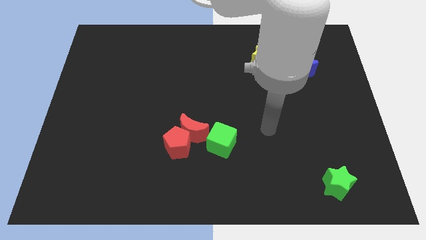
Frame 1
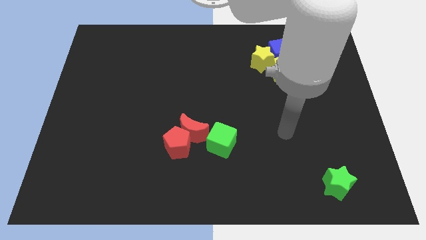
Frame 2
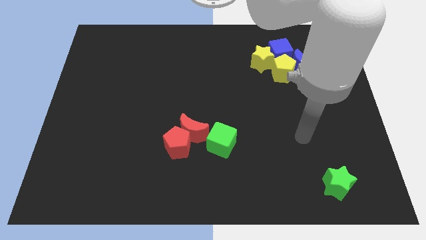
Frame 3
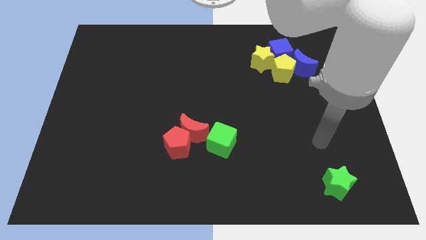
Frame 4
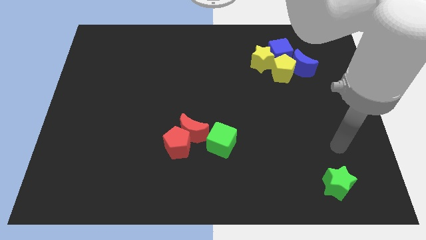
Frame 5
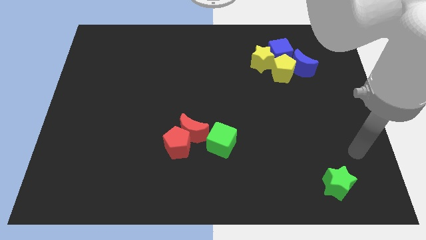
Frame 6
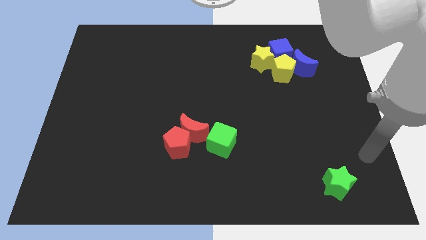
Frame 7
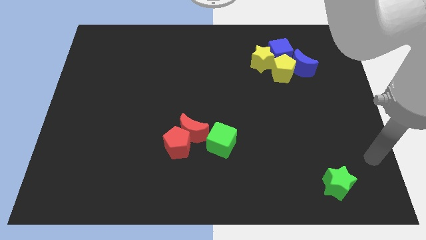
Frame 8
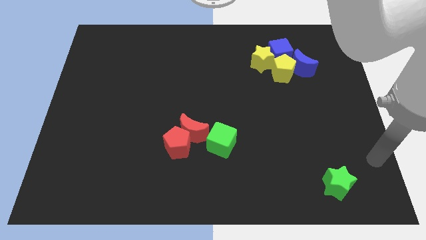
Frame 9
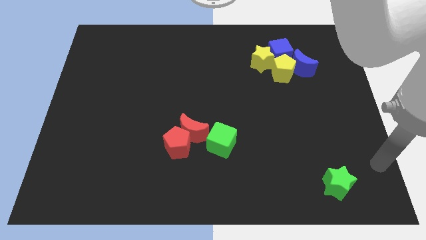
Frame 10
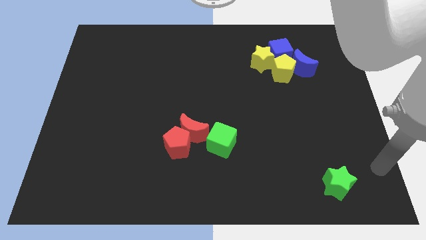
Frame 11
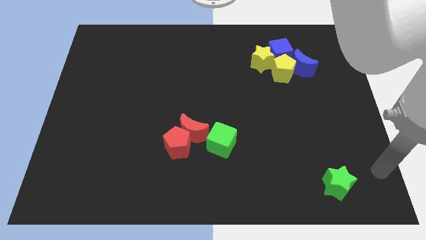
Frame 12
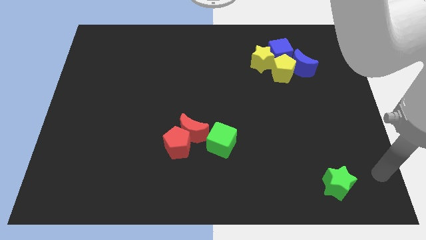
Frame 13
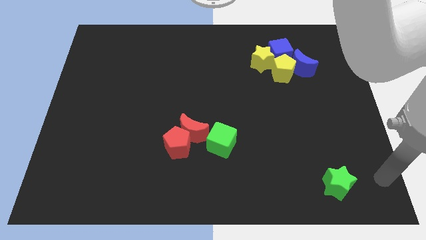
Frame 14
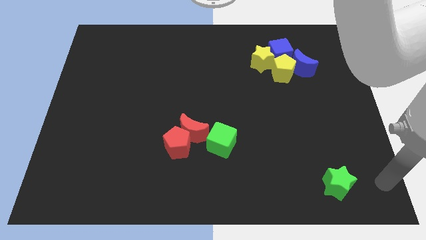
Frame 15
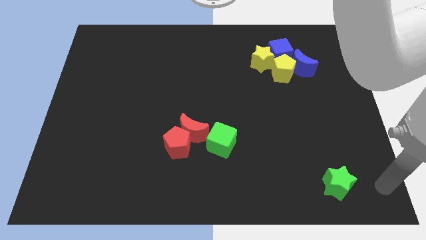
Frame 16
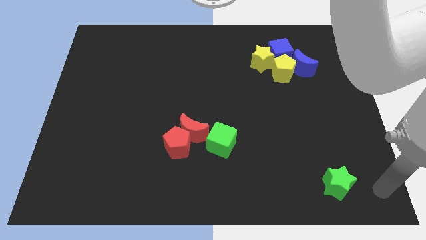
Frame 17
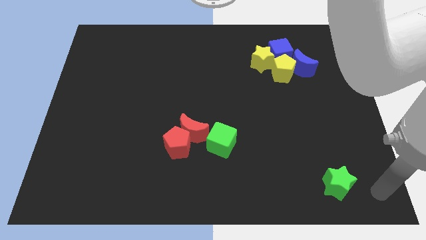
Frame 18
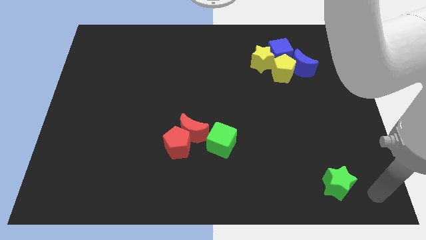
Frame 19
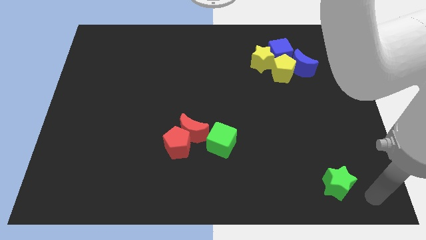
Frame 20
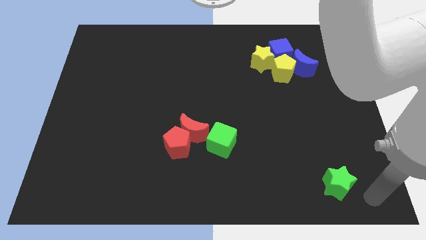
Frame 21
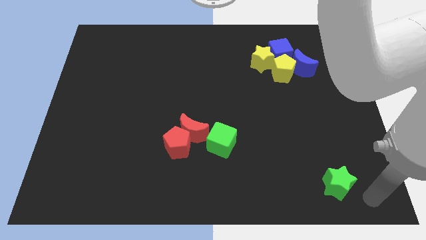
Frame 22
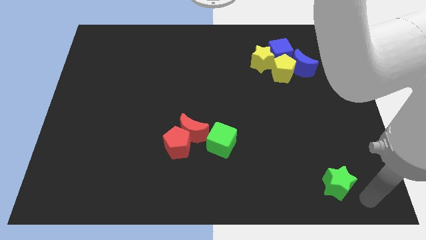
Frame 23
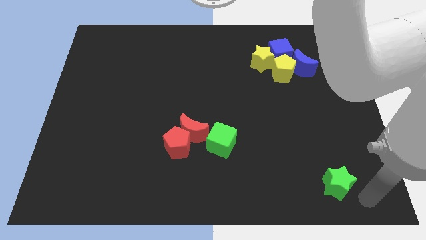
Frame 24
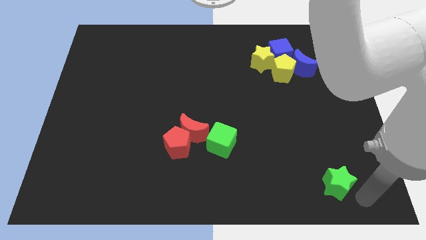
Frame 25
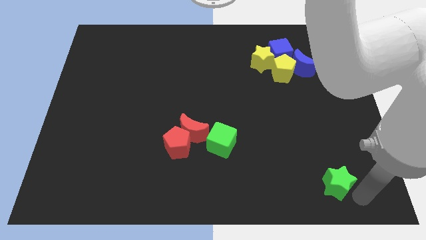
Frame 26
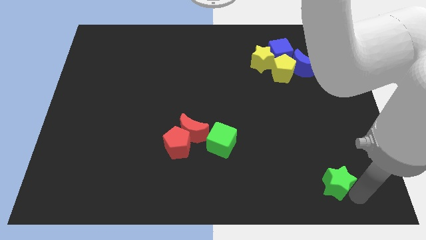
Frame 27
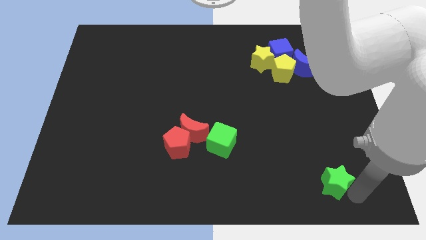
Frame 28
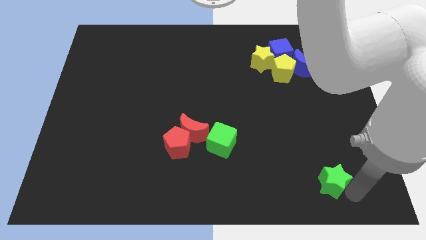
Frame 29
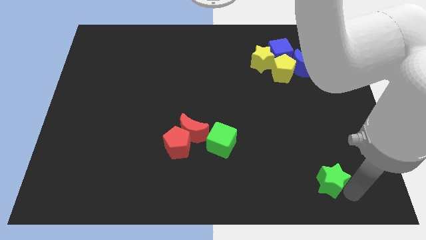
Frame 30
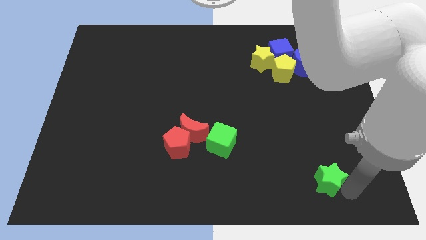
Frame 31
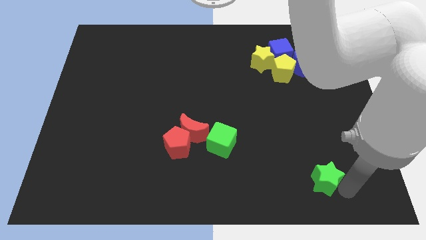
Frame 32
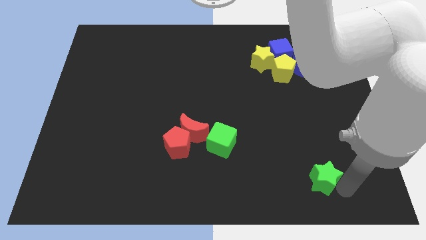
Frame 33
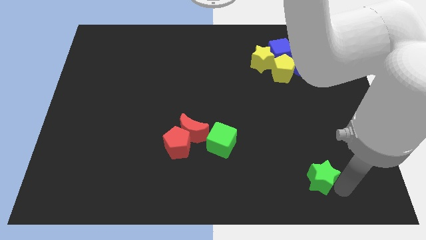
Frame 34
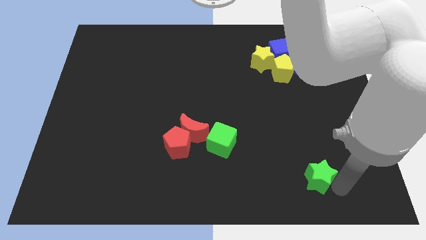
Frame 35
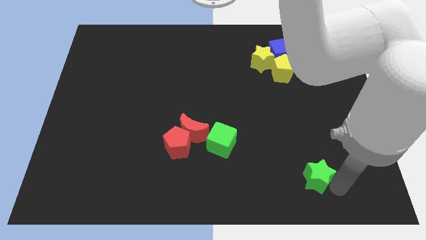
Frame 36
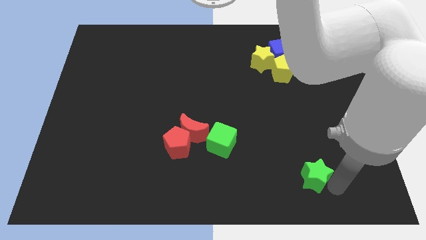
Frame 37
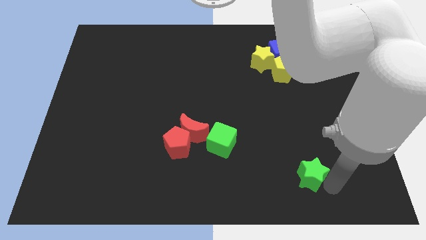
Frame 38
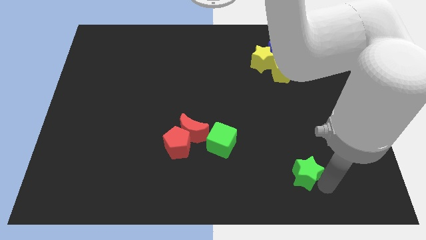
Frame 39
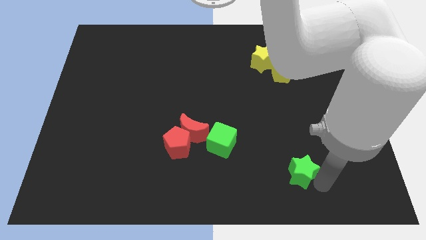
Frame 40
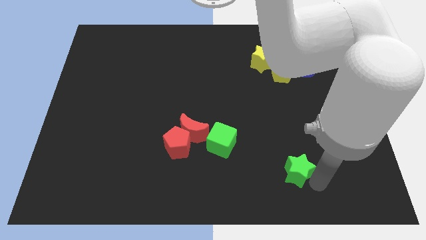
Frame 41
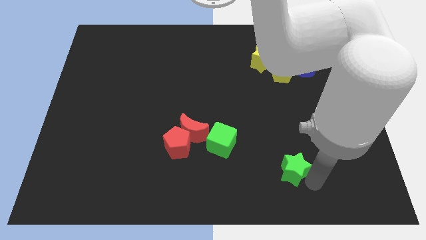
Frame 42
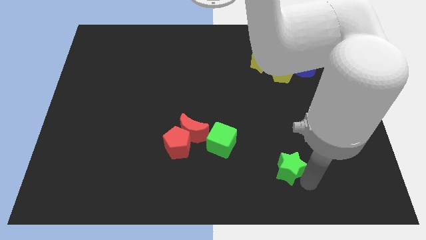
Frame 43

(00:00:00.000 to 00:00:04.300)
move the green star towards the group of blocks

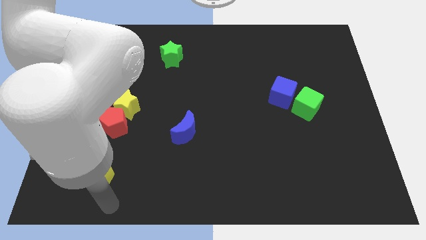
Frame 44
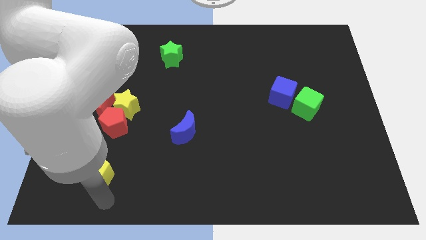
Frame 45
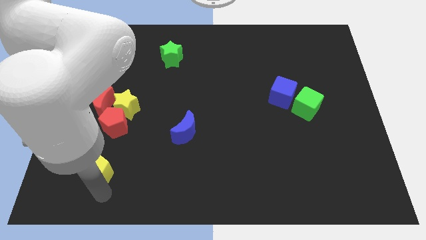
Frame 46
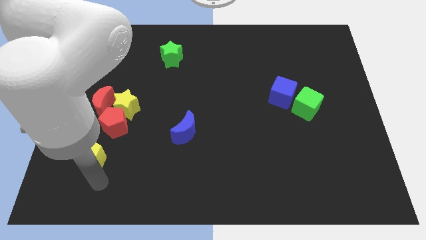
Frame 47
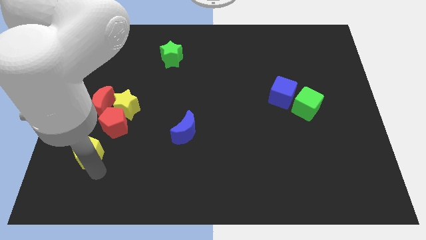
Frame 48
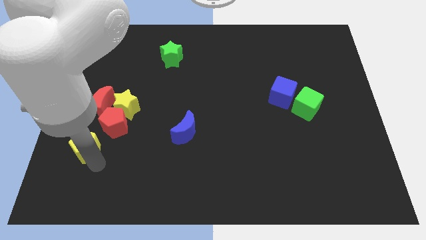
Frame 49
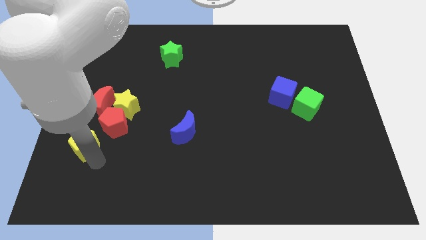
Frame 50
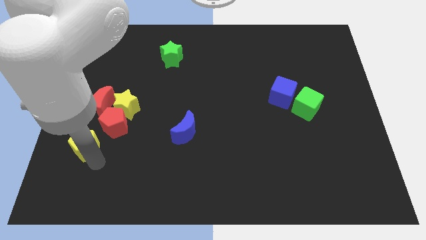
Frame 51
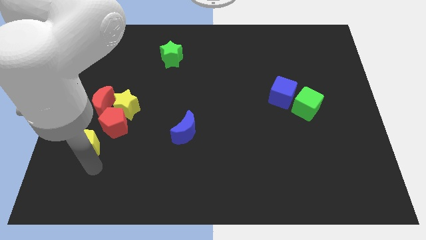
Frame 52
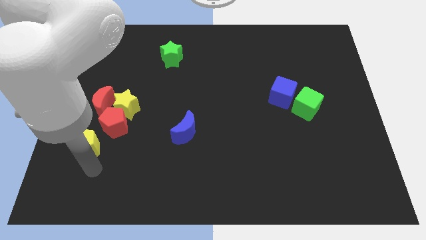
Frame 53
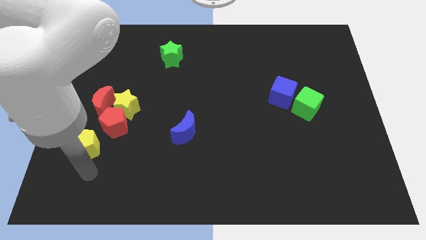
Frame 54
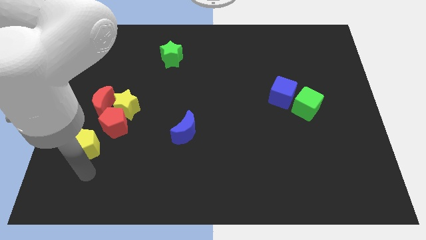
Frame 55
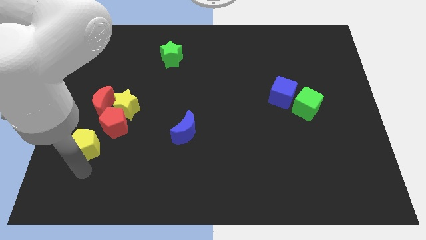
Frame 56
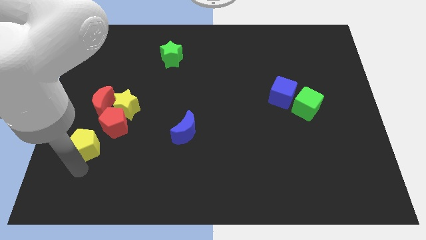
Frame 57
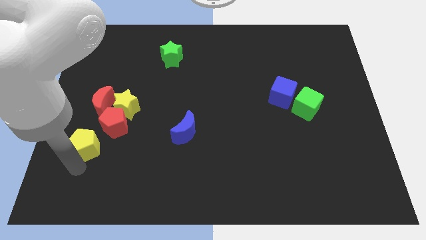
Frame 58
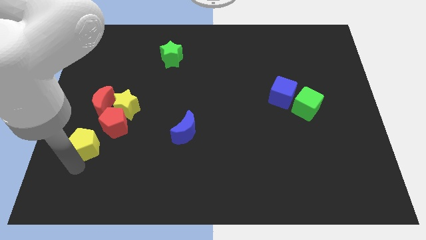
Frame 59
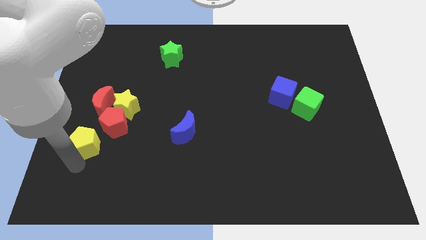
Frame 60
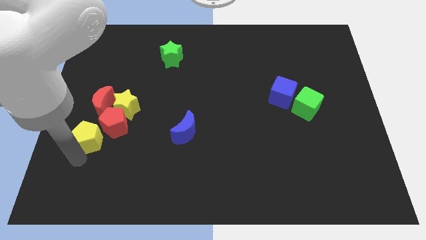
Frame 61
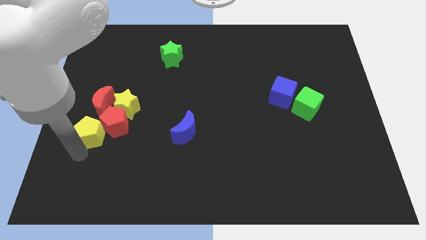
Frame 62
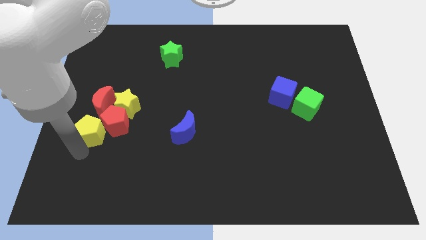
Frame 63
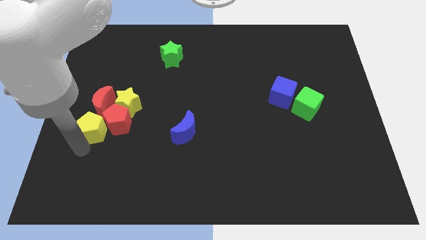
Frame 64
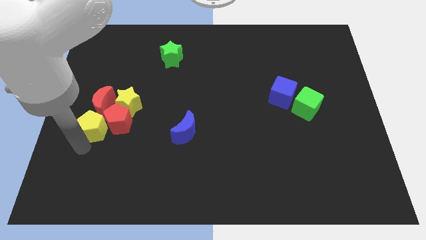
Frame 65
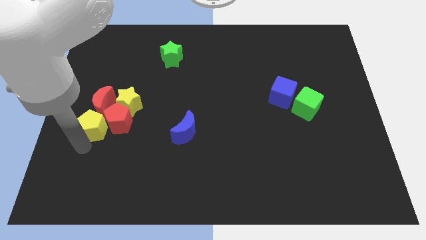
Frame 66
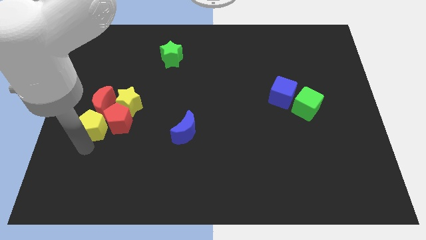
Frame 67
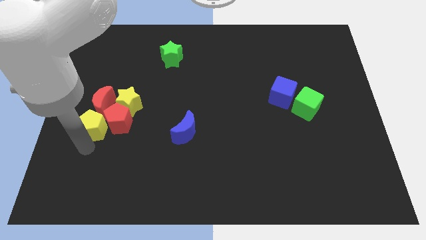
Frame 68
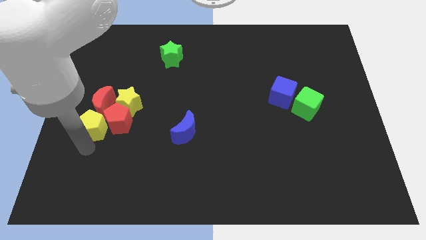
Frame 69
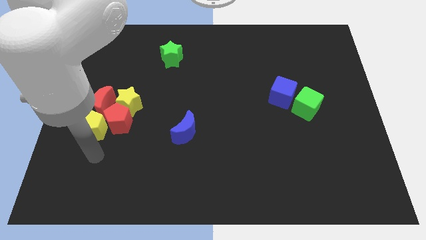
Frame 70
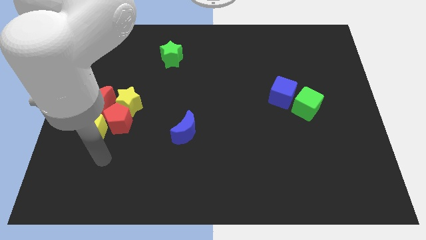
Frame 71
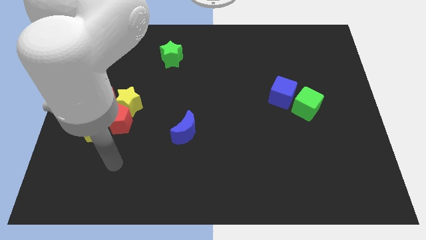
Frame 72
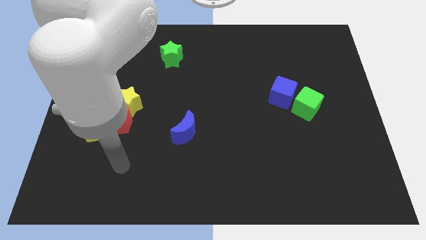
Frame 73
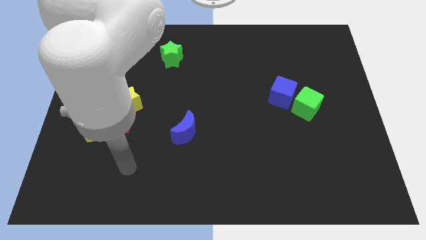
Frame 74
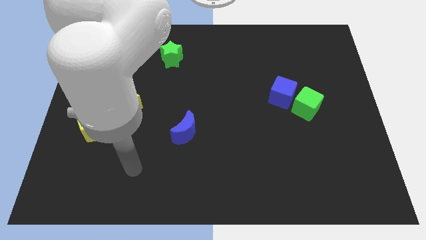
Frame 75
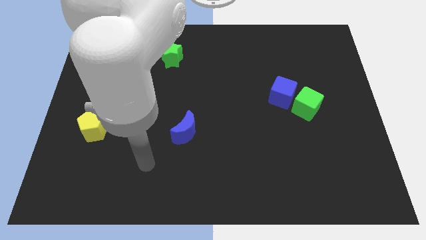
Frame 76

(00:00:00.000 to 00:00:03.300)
push the yellow pentagon into the group of blocks

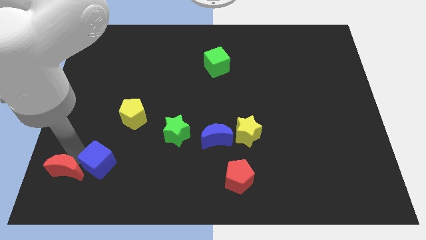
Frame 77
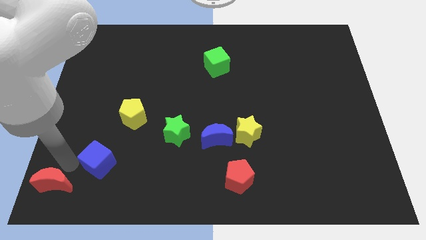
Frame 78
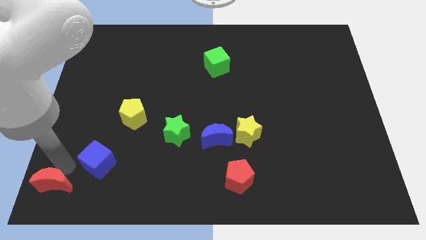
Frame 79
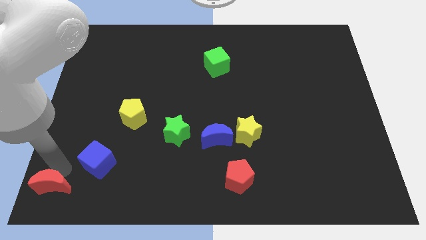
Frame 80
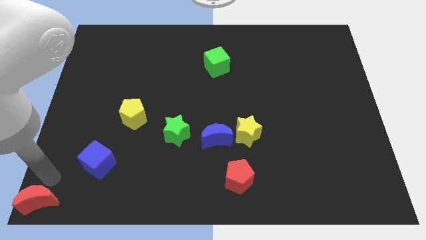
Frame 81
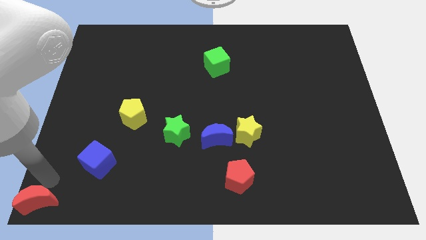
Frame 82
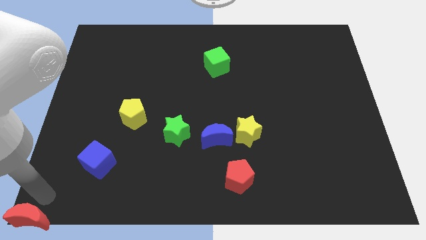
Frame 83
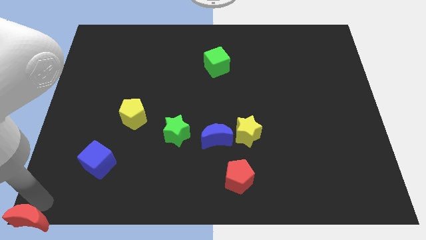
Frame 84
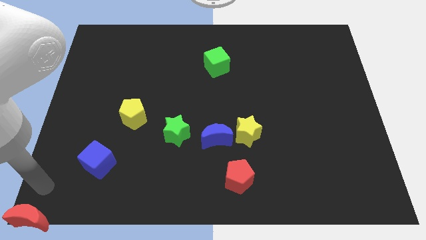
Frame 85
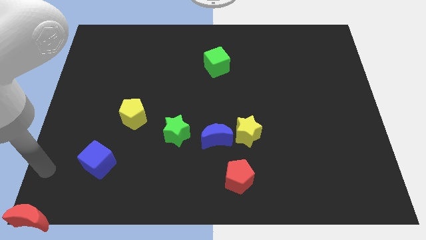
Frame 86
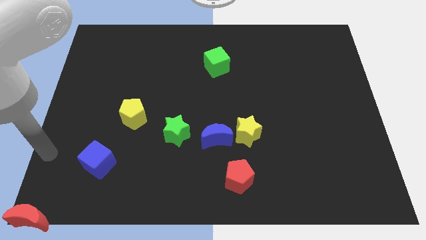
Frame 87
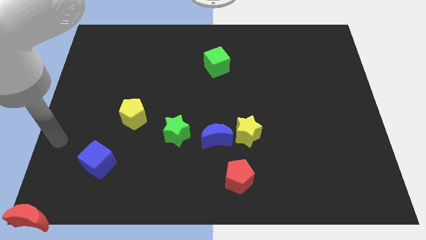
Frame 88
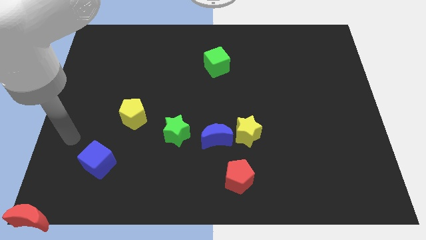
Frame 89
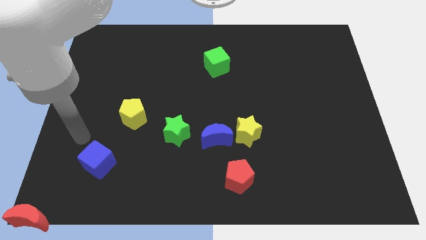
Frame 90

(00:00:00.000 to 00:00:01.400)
place the red moon at the bottom left corner of the board

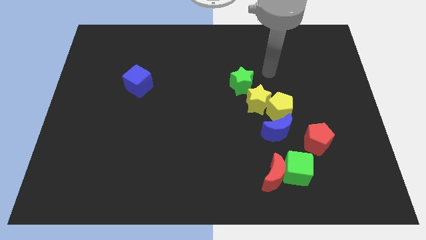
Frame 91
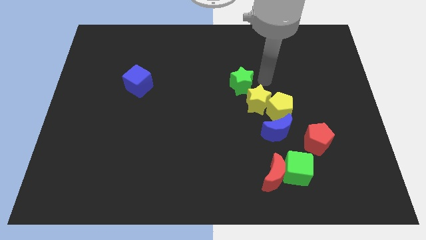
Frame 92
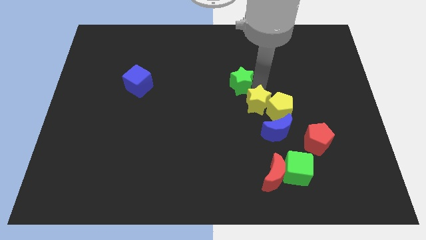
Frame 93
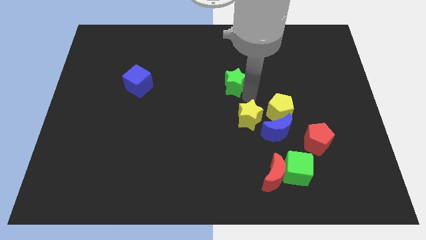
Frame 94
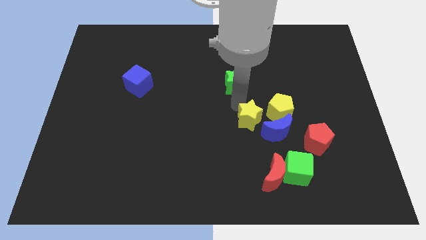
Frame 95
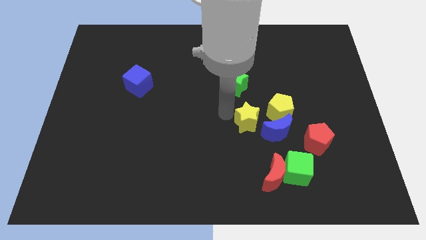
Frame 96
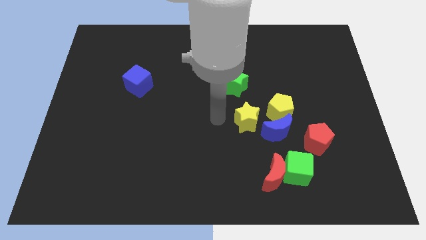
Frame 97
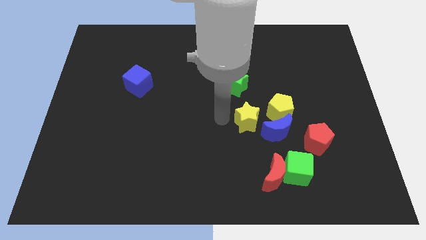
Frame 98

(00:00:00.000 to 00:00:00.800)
push the yellow star downwards slightly
